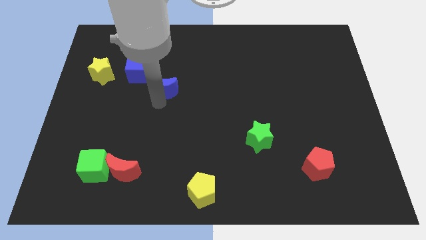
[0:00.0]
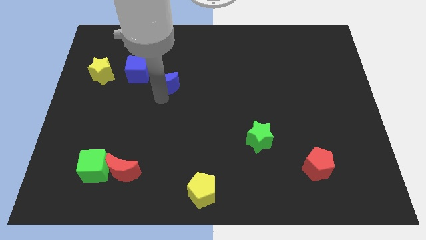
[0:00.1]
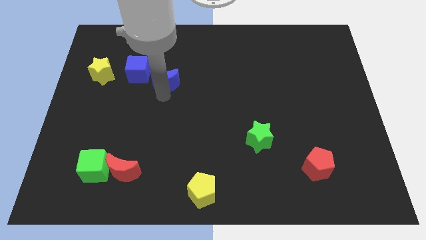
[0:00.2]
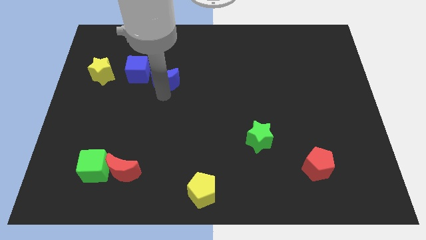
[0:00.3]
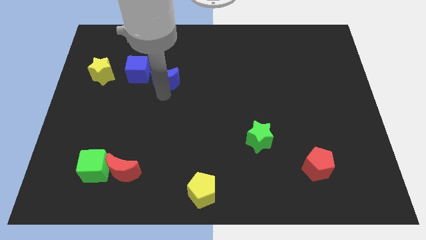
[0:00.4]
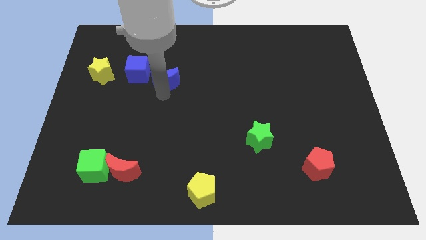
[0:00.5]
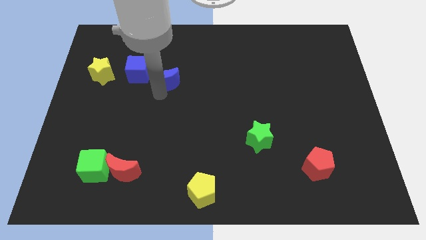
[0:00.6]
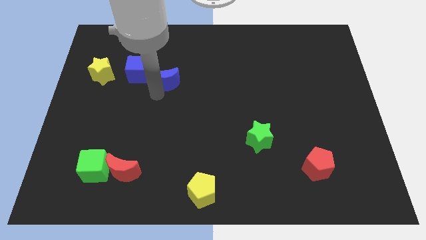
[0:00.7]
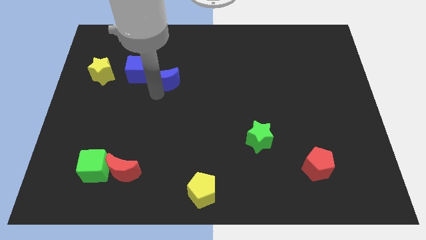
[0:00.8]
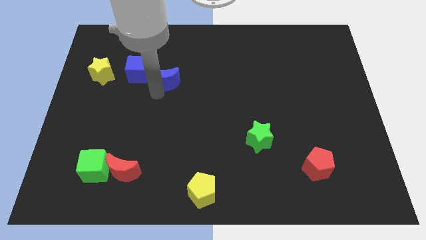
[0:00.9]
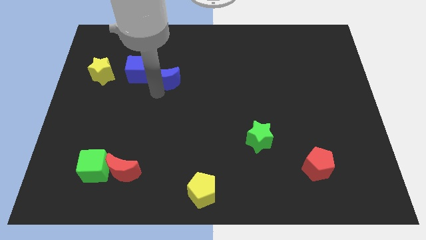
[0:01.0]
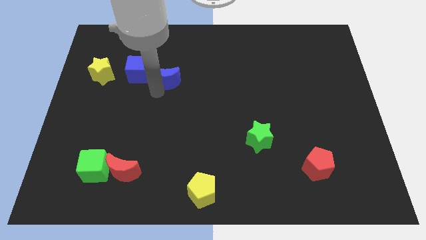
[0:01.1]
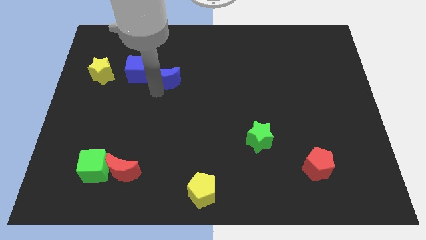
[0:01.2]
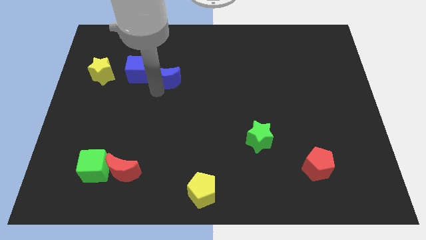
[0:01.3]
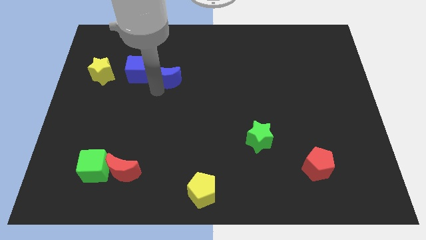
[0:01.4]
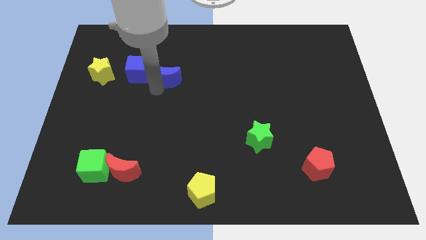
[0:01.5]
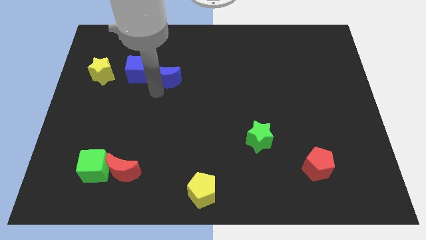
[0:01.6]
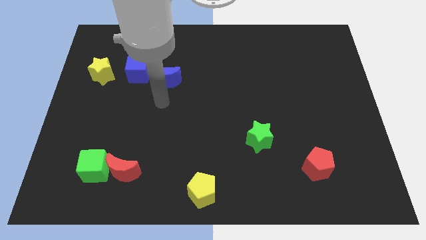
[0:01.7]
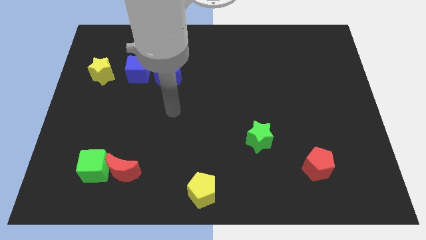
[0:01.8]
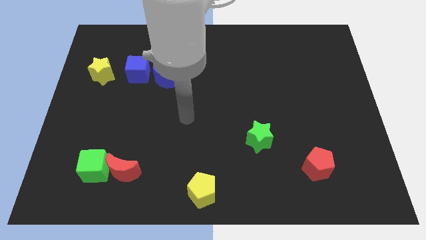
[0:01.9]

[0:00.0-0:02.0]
move the blue crescent to the right side of the blue cube

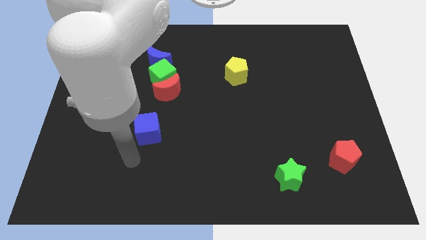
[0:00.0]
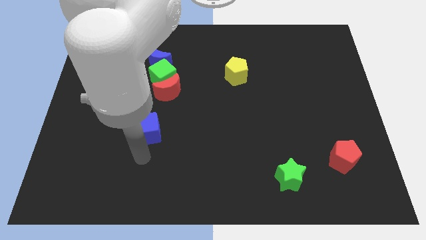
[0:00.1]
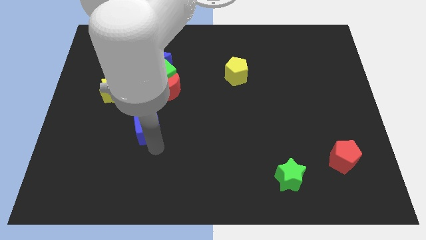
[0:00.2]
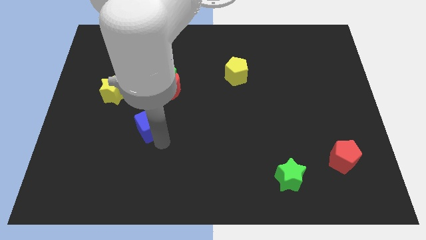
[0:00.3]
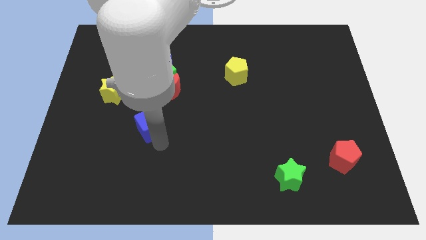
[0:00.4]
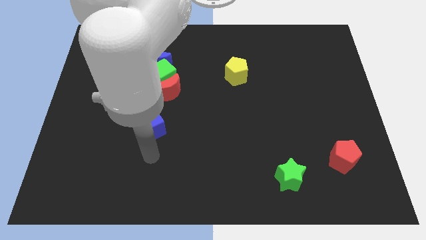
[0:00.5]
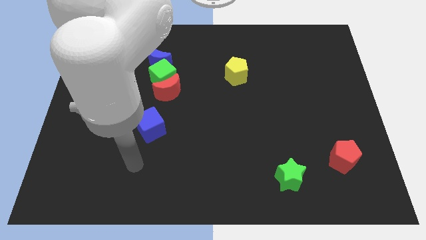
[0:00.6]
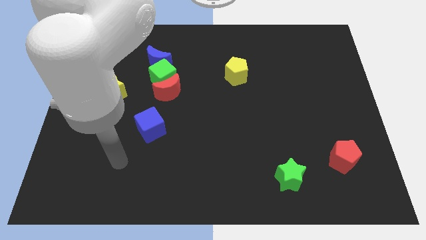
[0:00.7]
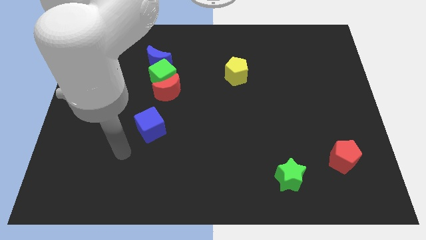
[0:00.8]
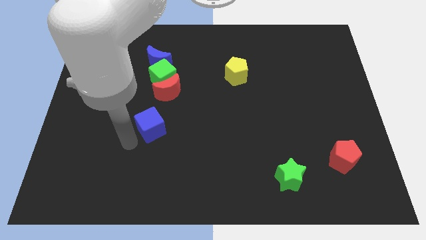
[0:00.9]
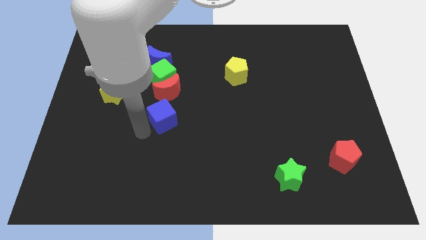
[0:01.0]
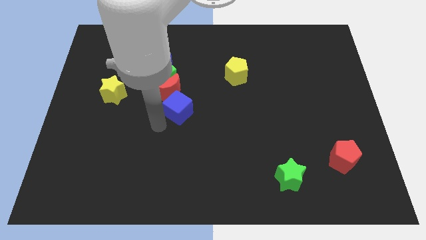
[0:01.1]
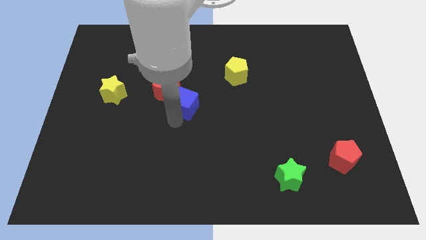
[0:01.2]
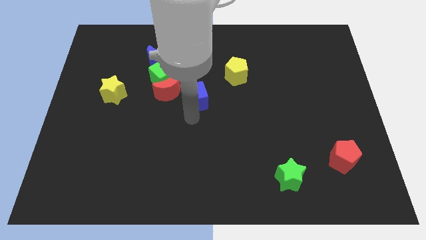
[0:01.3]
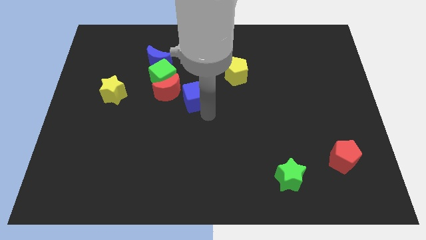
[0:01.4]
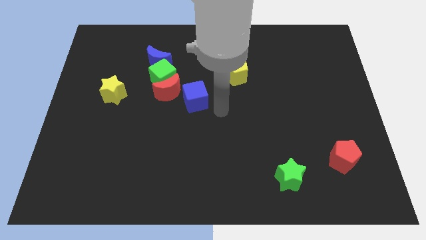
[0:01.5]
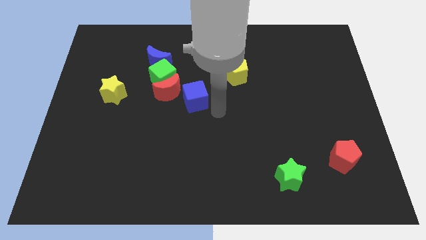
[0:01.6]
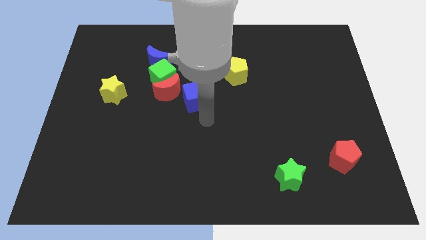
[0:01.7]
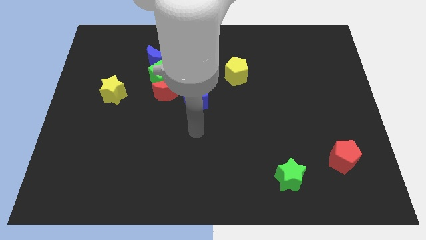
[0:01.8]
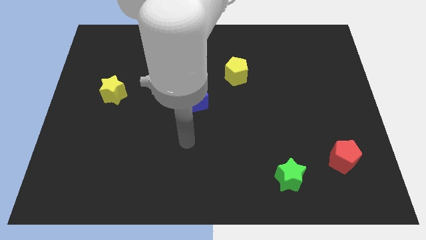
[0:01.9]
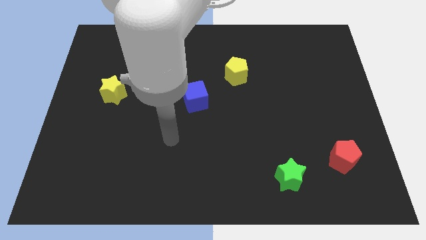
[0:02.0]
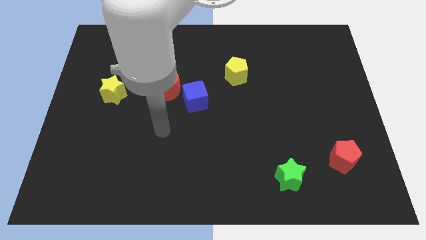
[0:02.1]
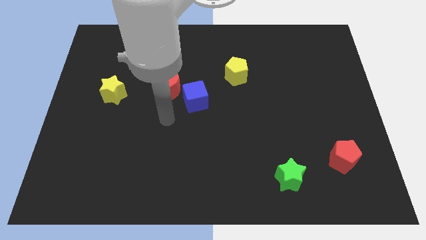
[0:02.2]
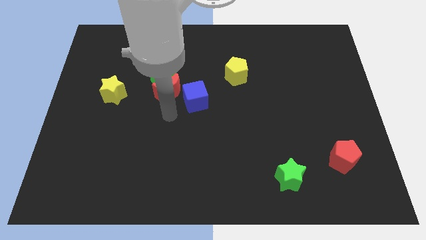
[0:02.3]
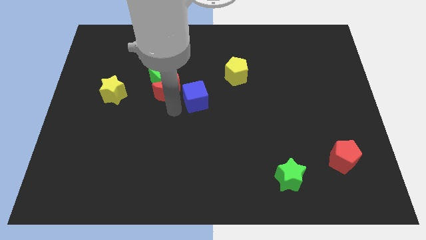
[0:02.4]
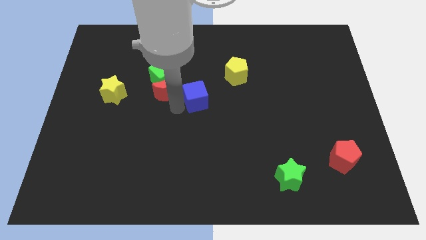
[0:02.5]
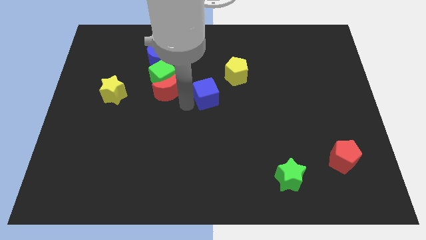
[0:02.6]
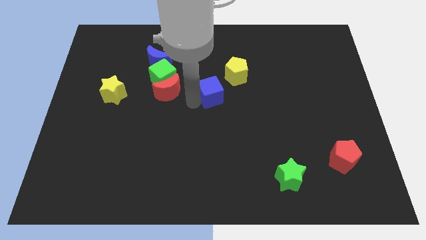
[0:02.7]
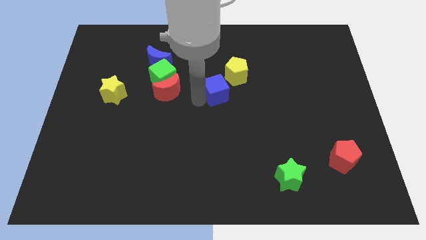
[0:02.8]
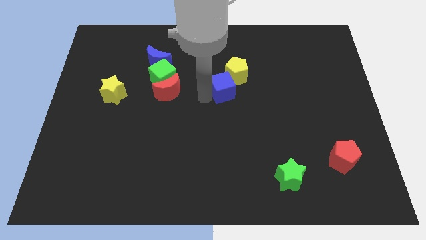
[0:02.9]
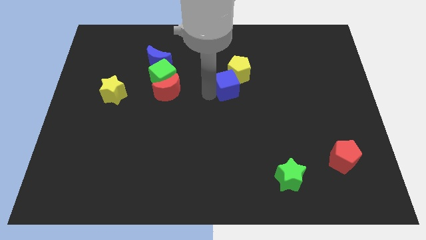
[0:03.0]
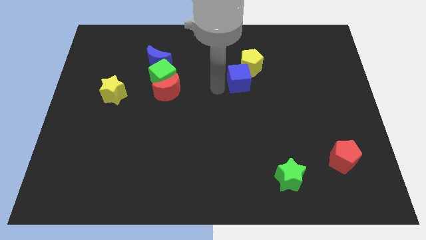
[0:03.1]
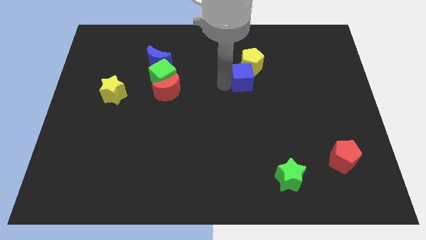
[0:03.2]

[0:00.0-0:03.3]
push the blue cube in to the yellow pentagon

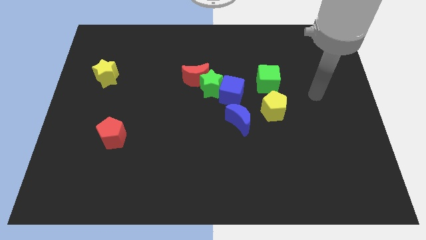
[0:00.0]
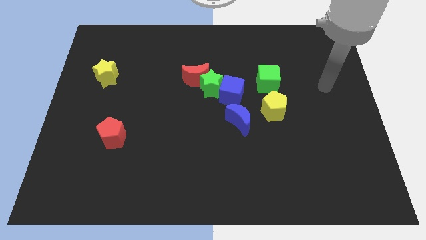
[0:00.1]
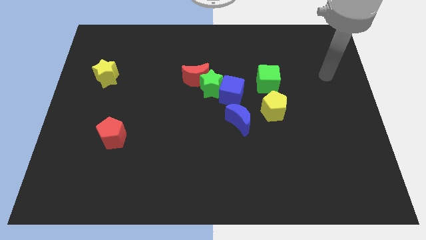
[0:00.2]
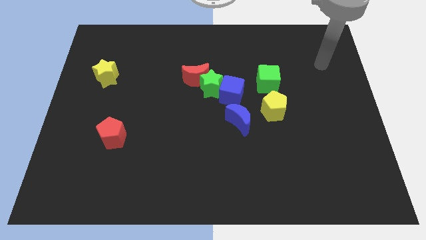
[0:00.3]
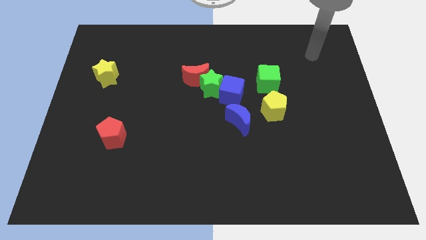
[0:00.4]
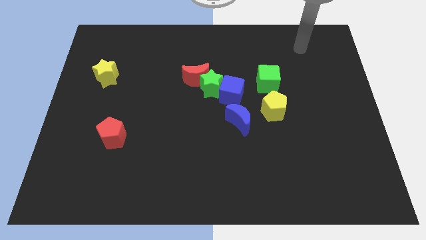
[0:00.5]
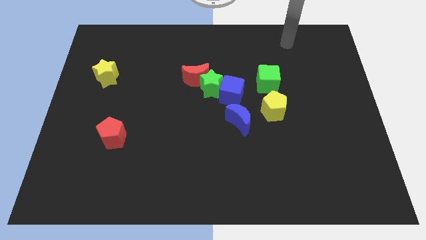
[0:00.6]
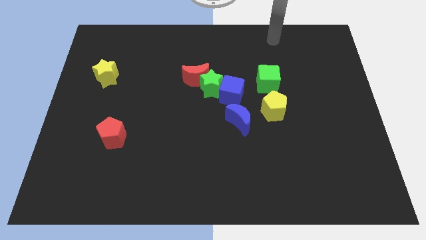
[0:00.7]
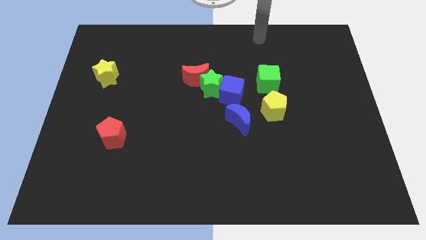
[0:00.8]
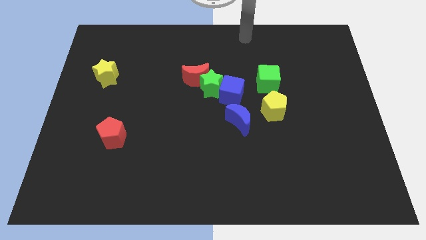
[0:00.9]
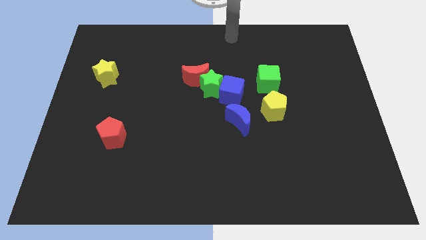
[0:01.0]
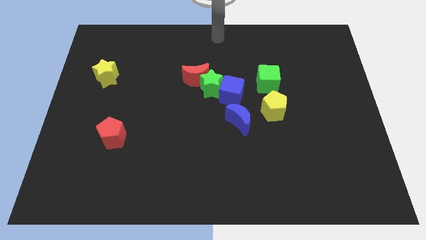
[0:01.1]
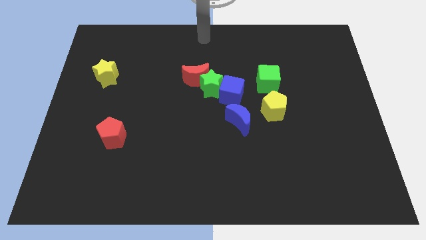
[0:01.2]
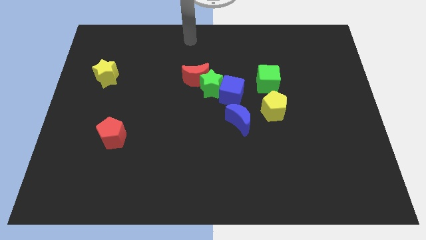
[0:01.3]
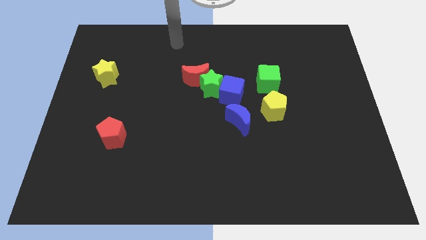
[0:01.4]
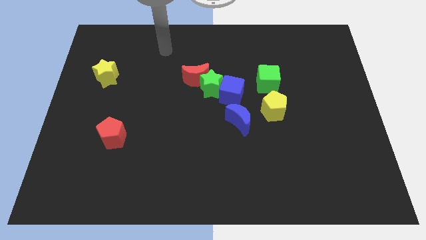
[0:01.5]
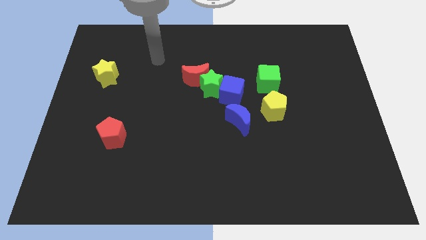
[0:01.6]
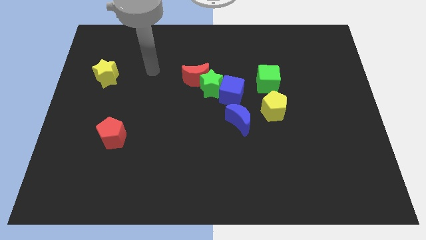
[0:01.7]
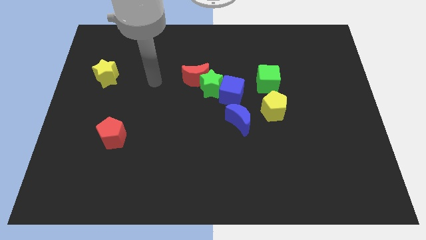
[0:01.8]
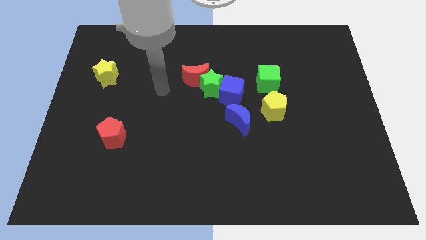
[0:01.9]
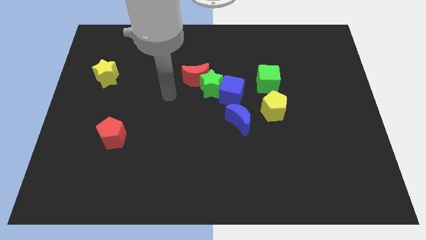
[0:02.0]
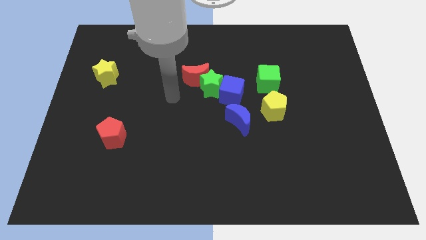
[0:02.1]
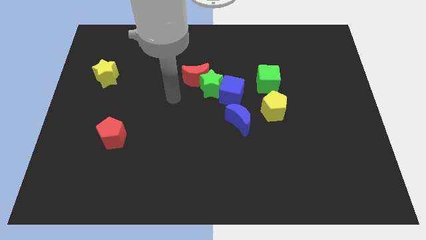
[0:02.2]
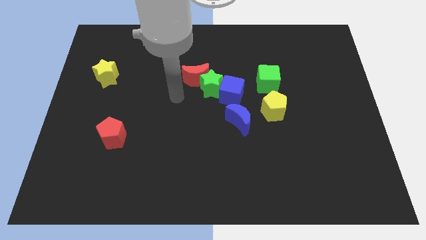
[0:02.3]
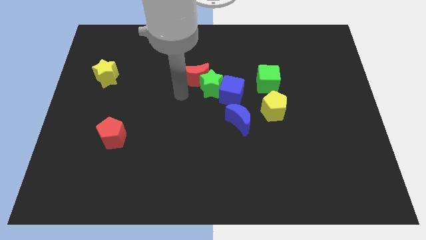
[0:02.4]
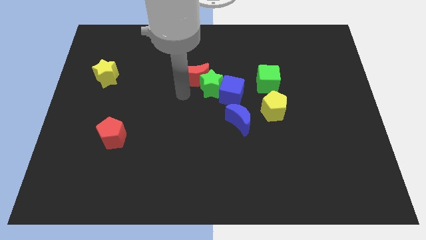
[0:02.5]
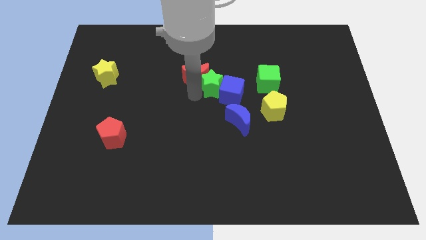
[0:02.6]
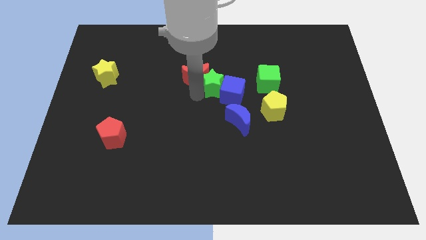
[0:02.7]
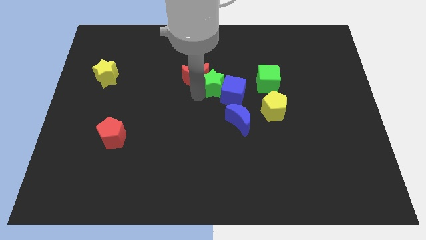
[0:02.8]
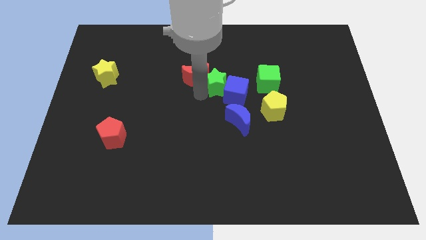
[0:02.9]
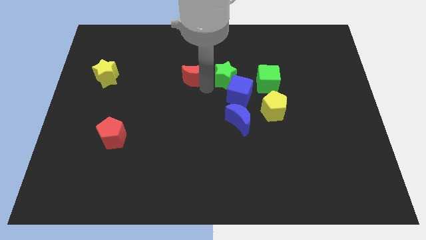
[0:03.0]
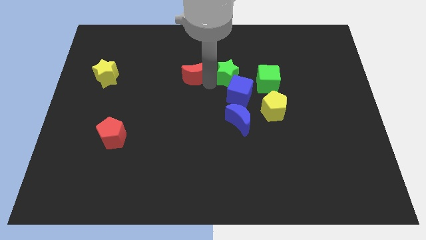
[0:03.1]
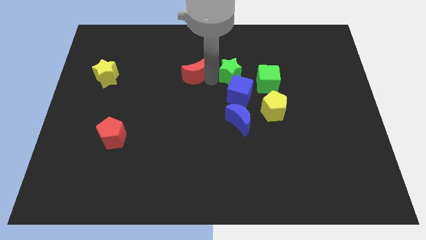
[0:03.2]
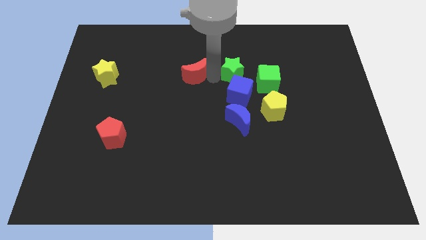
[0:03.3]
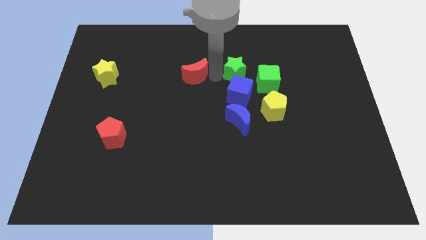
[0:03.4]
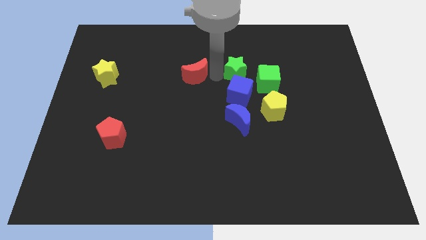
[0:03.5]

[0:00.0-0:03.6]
separate the green star from the group of blocks

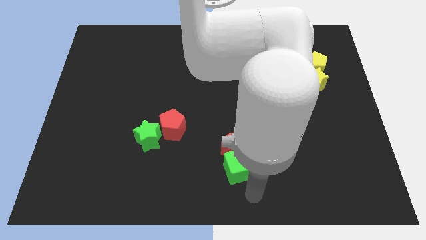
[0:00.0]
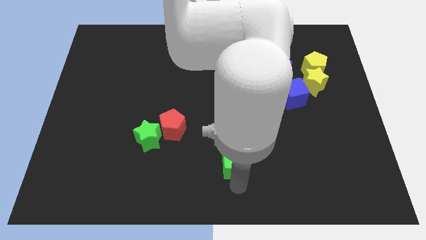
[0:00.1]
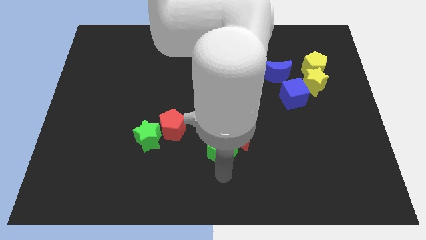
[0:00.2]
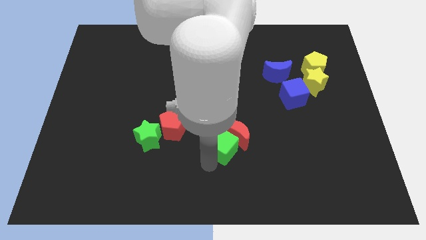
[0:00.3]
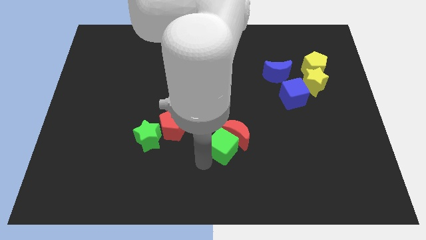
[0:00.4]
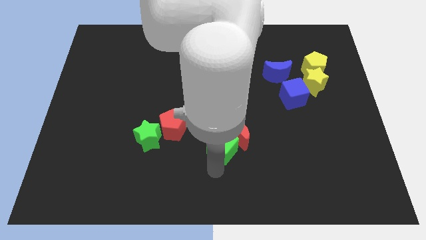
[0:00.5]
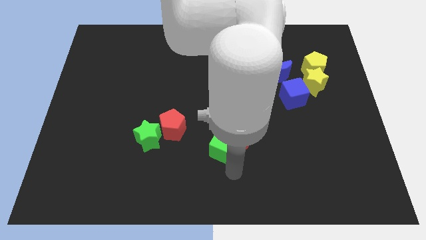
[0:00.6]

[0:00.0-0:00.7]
move the green cube into the red moon
